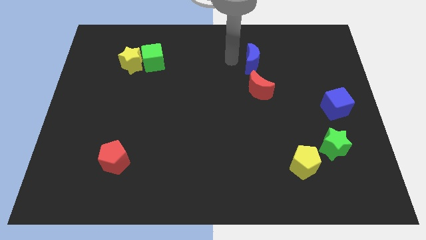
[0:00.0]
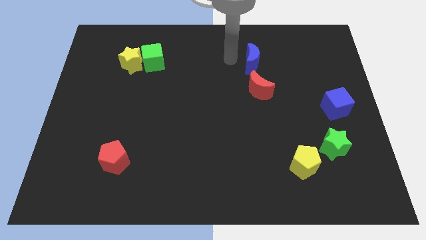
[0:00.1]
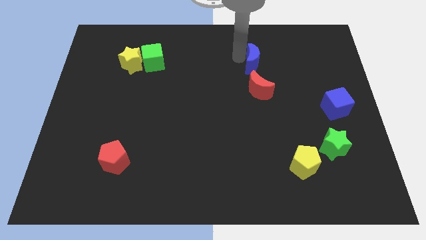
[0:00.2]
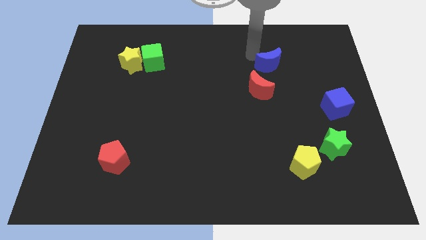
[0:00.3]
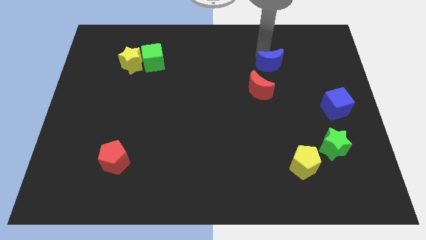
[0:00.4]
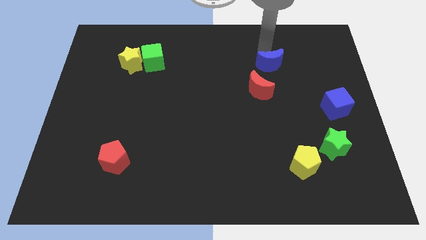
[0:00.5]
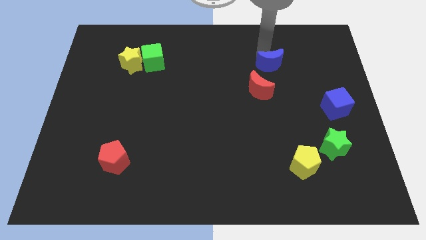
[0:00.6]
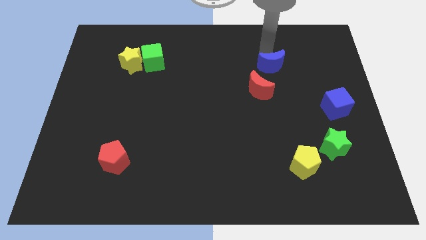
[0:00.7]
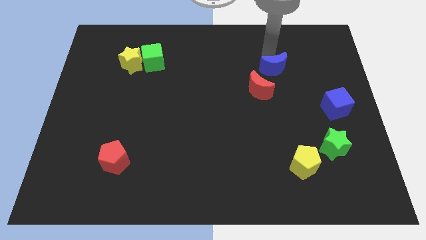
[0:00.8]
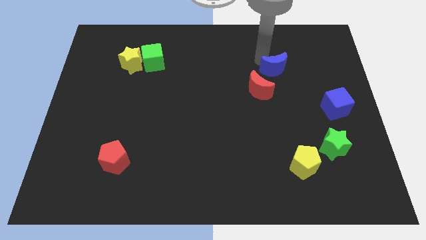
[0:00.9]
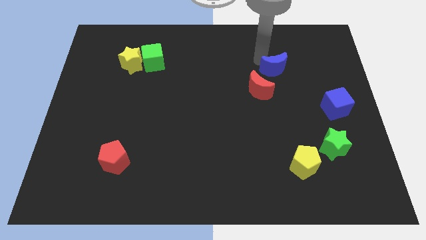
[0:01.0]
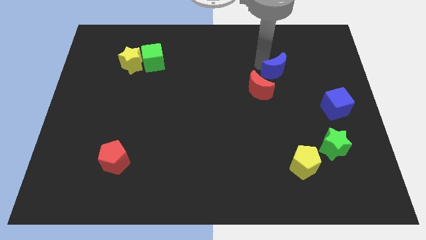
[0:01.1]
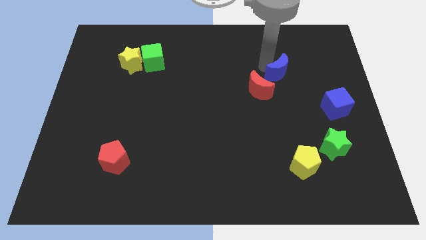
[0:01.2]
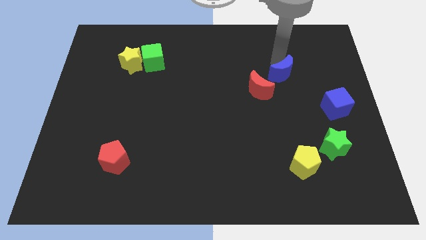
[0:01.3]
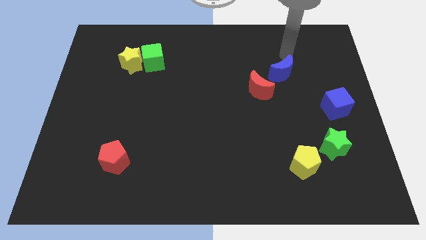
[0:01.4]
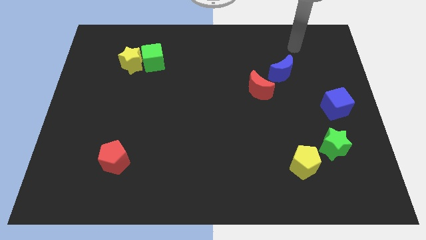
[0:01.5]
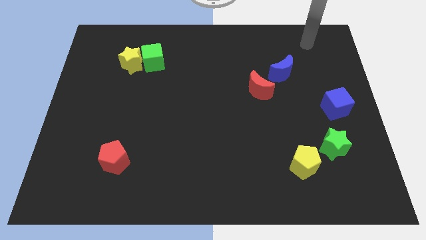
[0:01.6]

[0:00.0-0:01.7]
push the blue moon downwards slightly

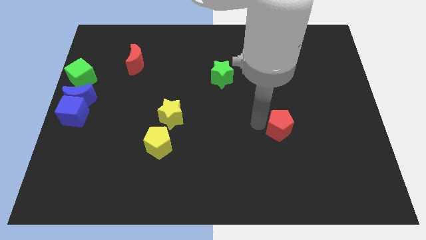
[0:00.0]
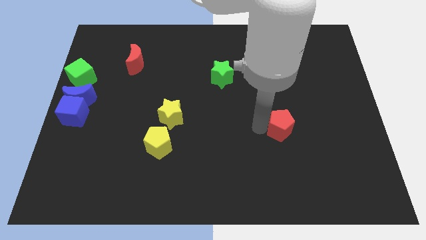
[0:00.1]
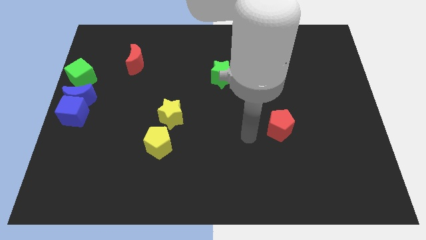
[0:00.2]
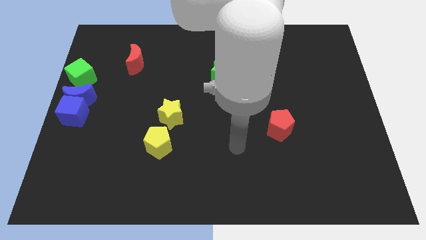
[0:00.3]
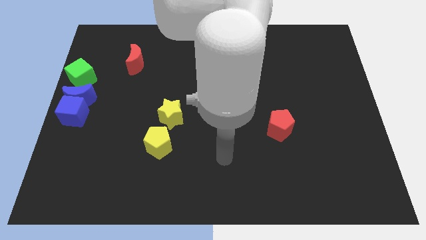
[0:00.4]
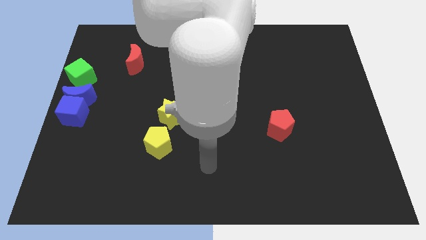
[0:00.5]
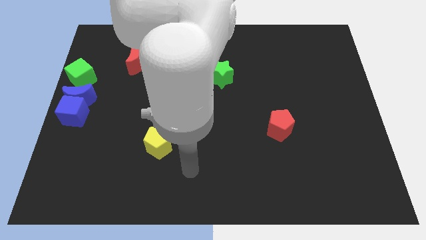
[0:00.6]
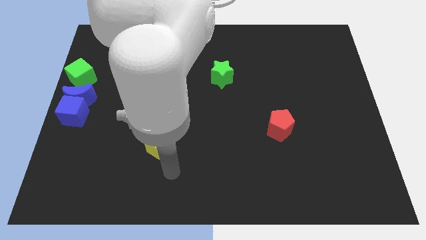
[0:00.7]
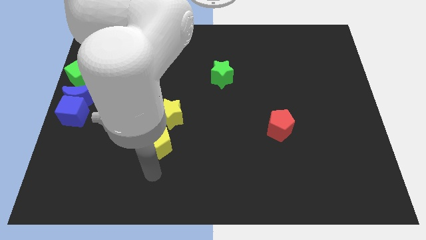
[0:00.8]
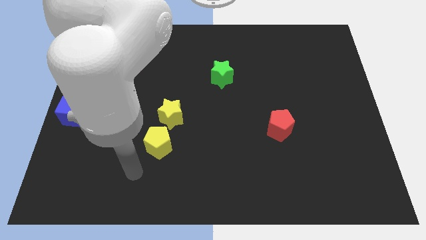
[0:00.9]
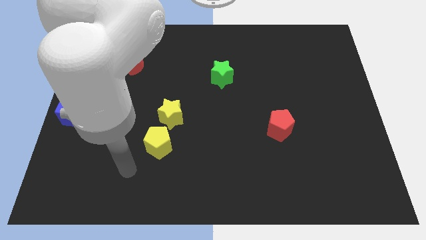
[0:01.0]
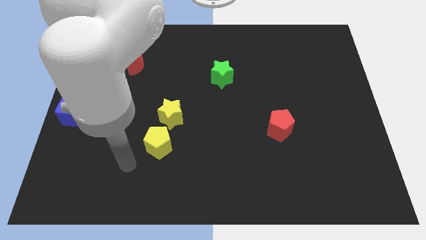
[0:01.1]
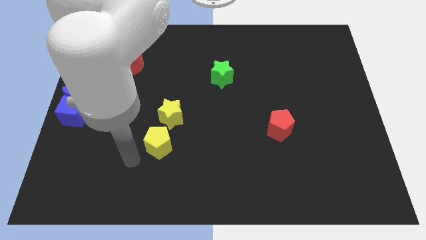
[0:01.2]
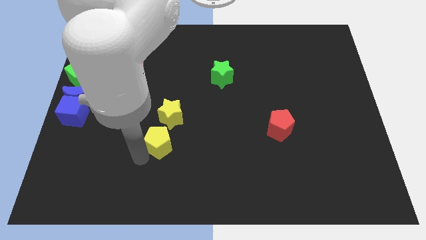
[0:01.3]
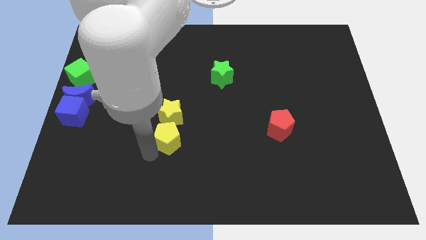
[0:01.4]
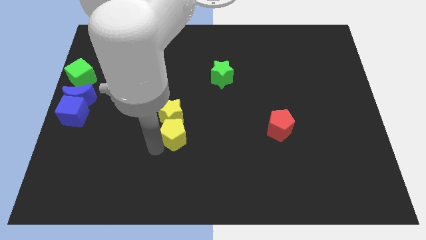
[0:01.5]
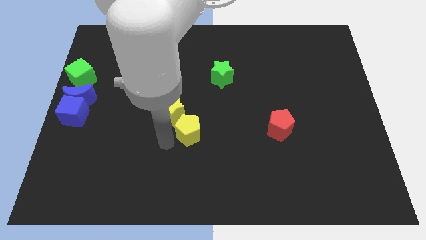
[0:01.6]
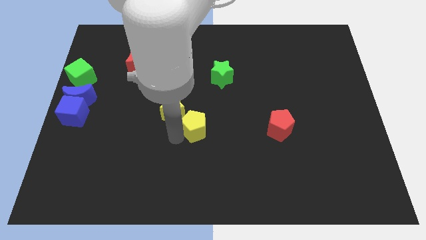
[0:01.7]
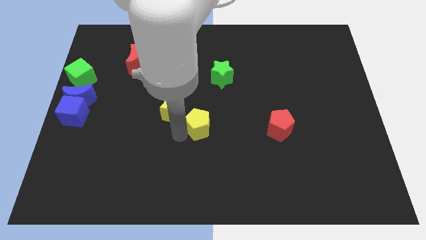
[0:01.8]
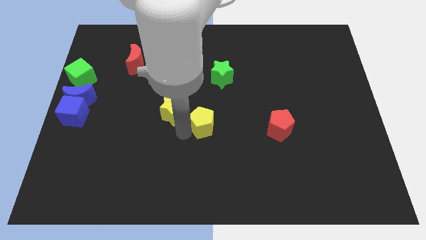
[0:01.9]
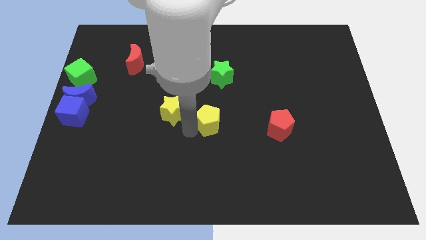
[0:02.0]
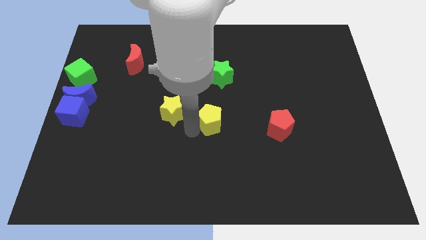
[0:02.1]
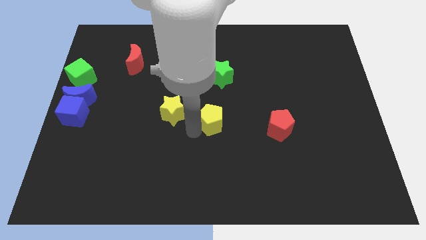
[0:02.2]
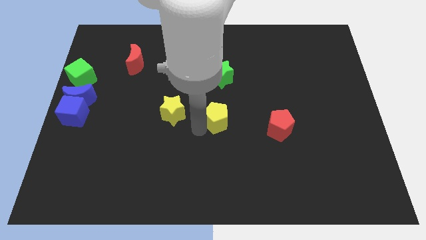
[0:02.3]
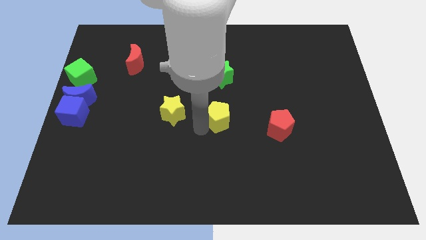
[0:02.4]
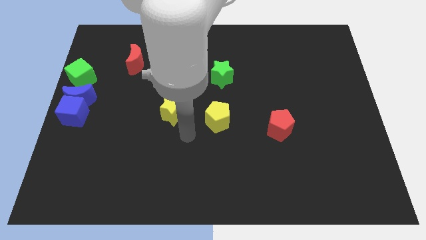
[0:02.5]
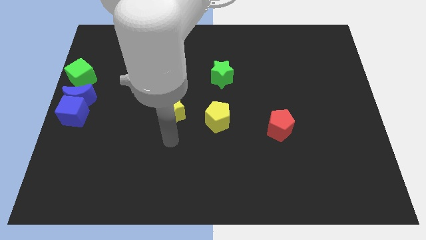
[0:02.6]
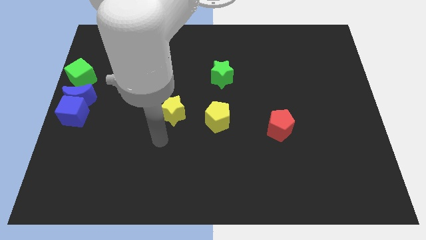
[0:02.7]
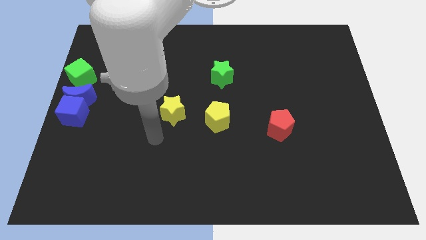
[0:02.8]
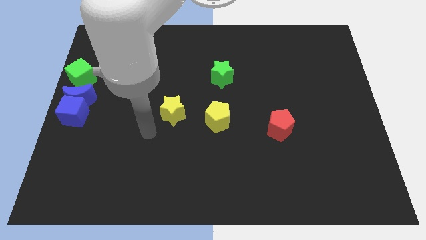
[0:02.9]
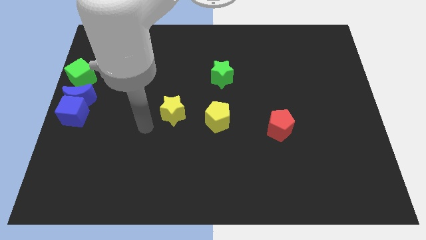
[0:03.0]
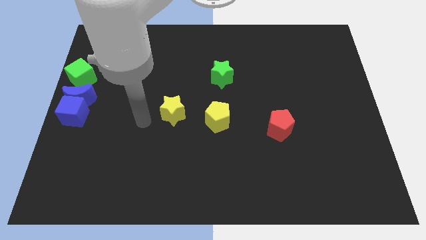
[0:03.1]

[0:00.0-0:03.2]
push the yellow pentagon to the bottom of the green star

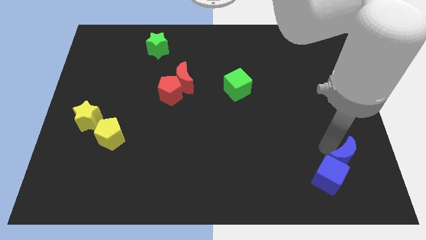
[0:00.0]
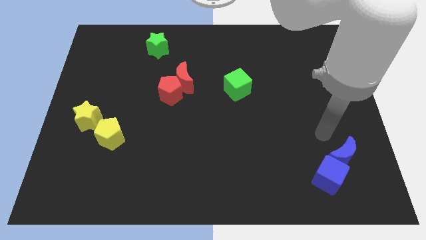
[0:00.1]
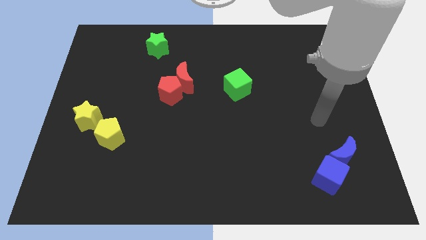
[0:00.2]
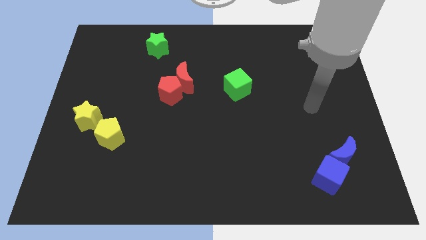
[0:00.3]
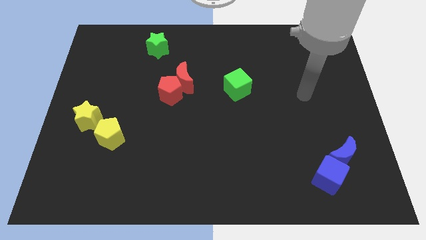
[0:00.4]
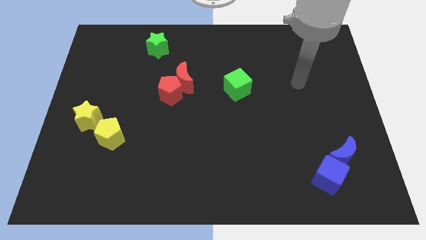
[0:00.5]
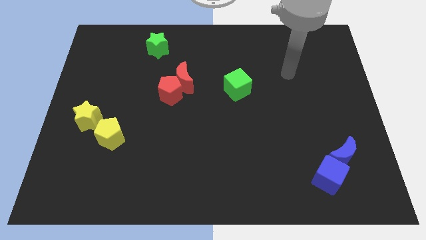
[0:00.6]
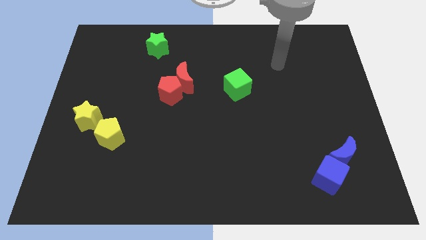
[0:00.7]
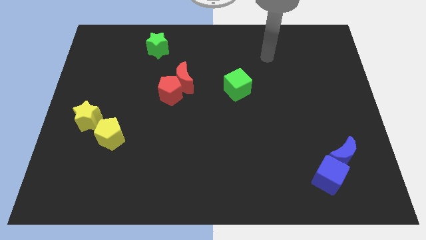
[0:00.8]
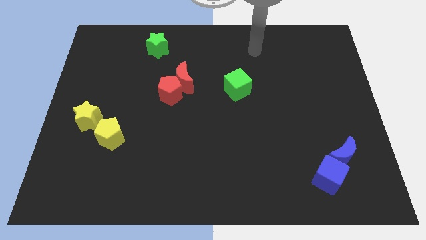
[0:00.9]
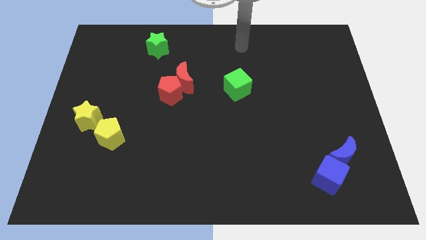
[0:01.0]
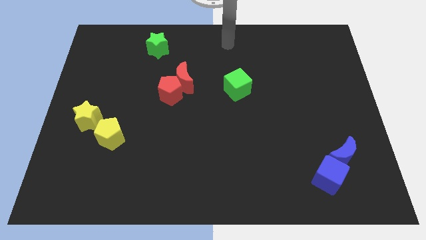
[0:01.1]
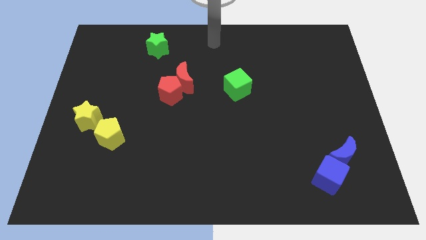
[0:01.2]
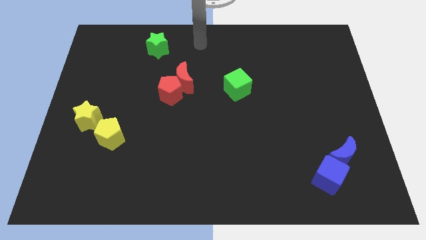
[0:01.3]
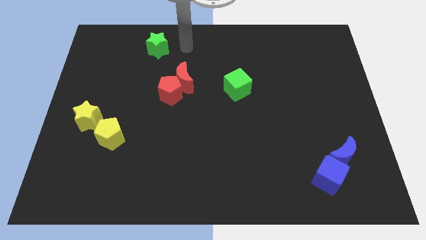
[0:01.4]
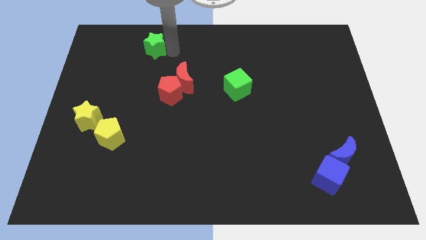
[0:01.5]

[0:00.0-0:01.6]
tap the right side of the green star

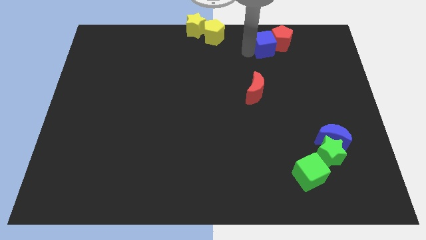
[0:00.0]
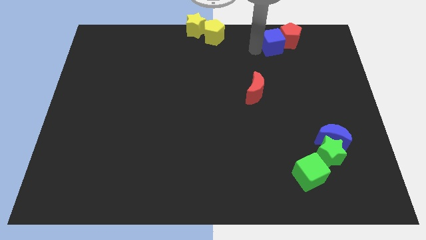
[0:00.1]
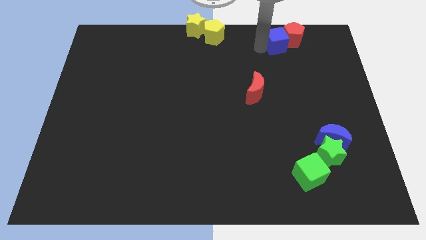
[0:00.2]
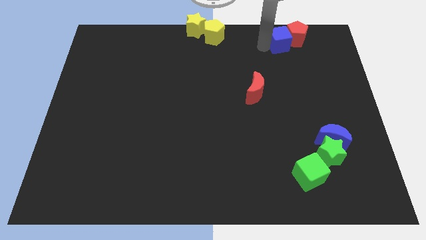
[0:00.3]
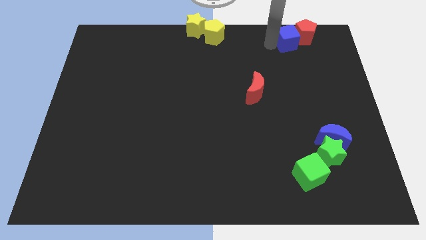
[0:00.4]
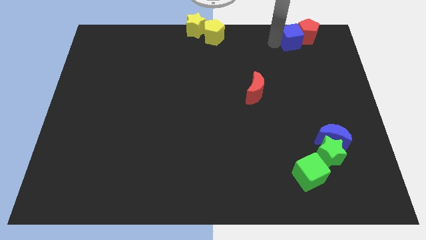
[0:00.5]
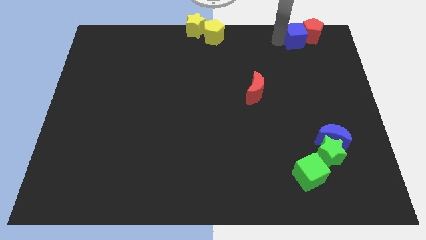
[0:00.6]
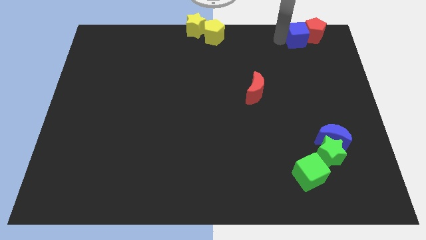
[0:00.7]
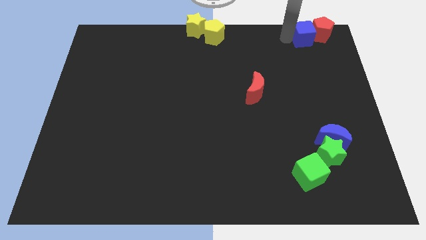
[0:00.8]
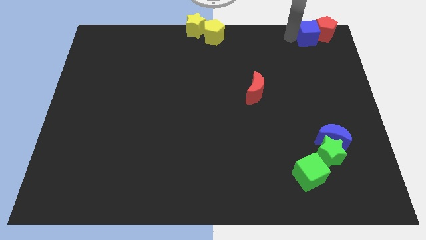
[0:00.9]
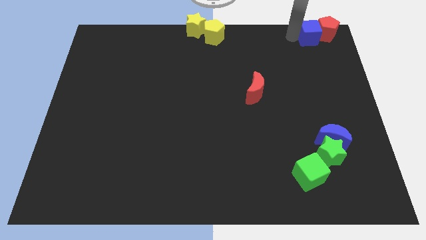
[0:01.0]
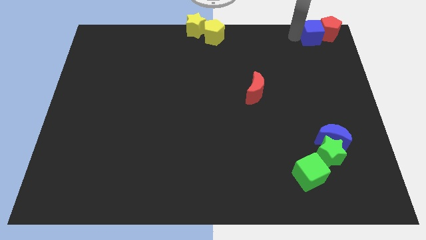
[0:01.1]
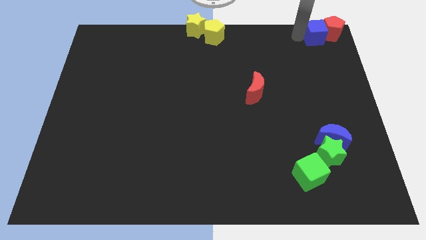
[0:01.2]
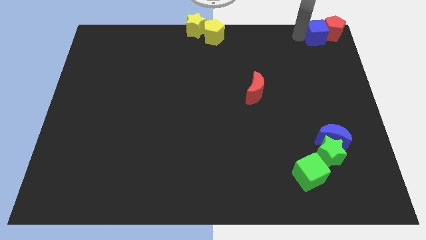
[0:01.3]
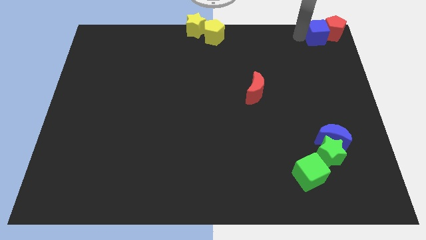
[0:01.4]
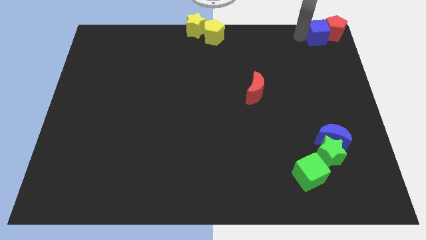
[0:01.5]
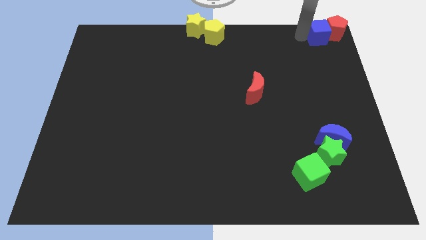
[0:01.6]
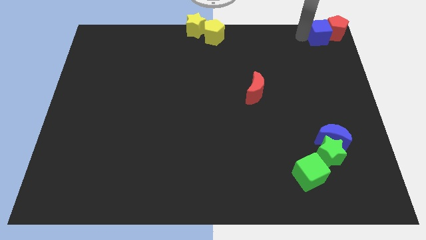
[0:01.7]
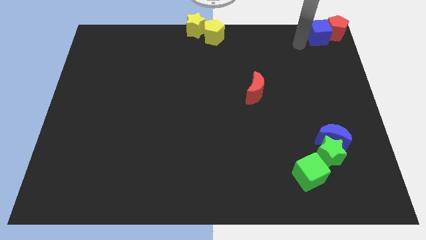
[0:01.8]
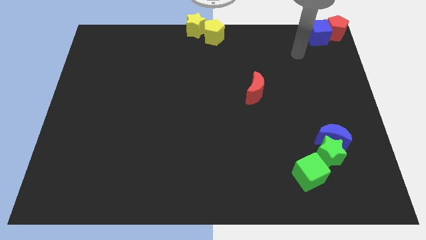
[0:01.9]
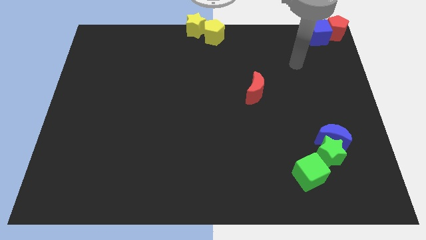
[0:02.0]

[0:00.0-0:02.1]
push blue cube along with red pentagon to top right corner

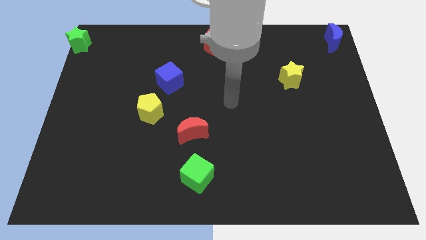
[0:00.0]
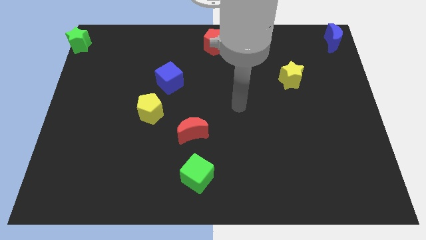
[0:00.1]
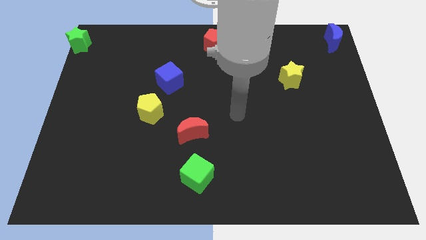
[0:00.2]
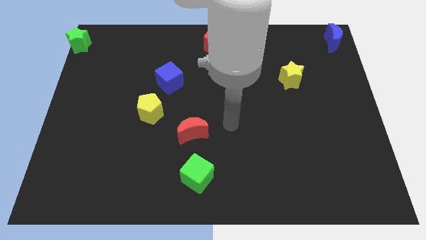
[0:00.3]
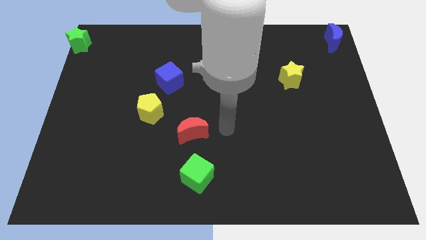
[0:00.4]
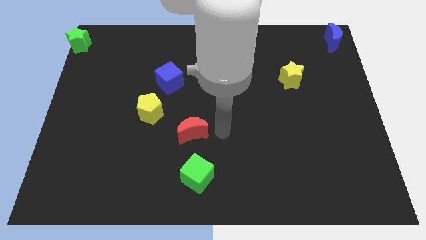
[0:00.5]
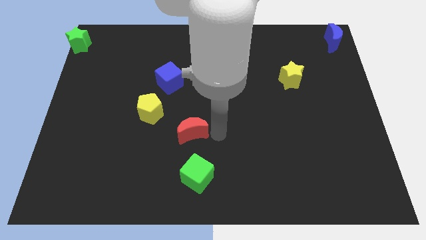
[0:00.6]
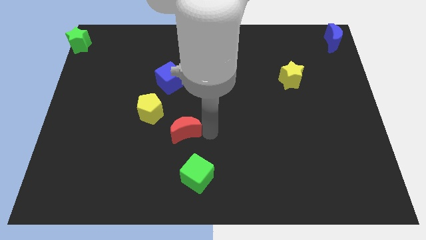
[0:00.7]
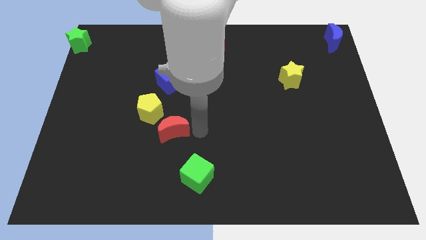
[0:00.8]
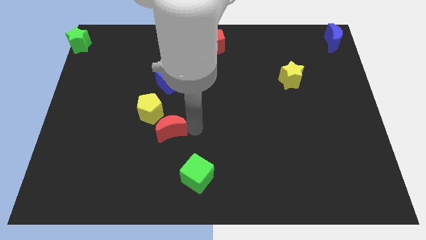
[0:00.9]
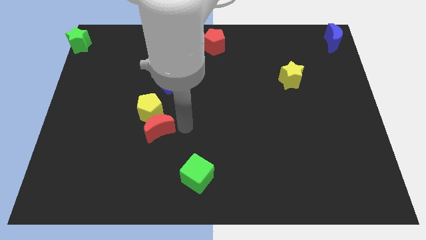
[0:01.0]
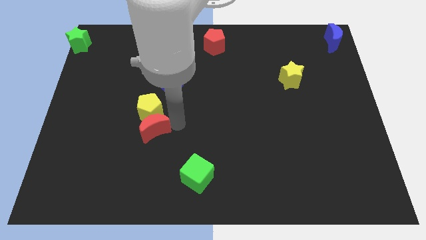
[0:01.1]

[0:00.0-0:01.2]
move red crescent towards the yellow pentagon
